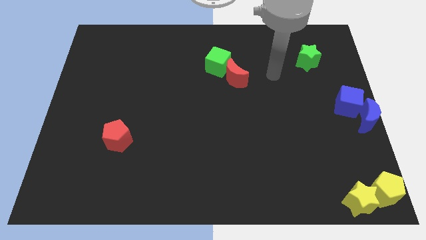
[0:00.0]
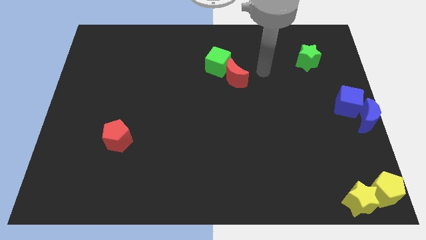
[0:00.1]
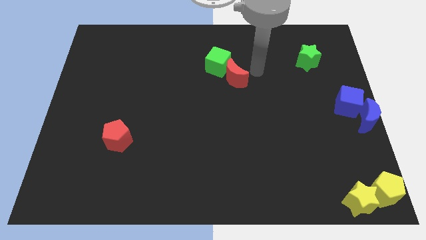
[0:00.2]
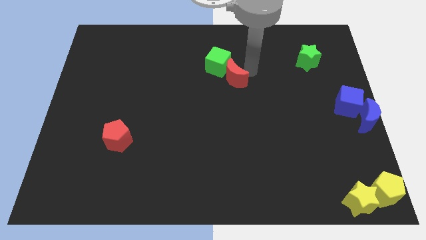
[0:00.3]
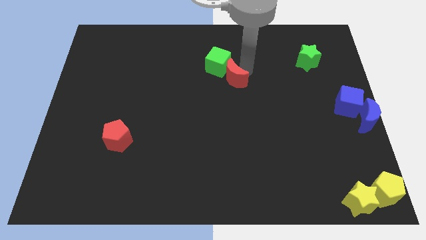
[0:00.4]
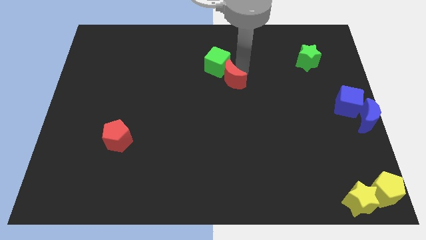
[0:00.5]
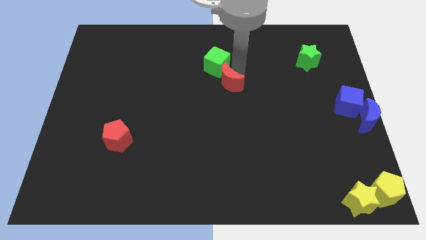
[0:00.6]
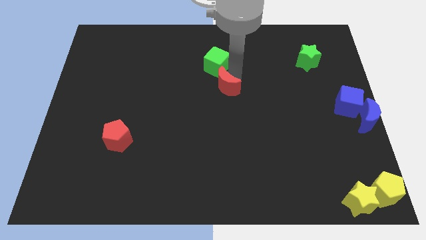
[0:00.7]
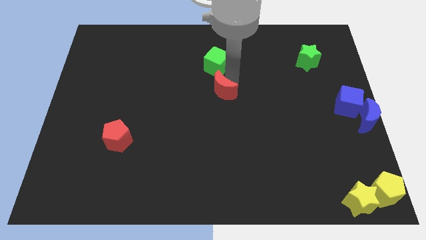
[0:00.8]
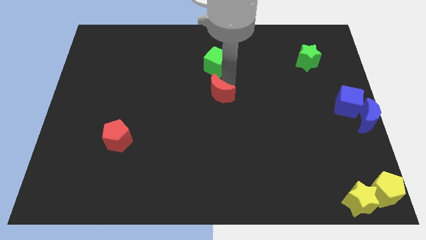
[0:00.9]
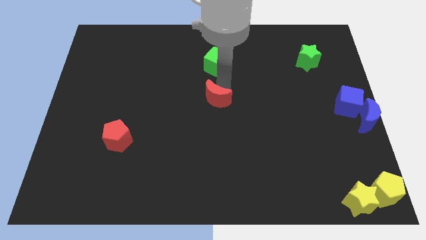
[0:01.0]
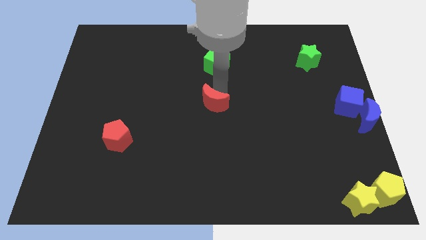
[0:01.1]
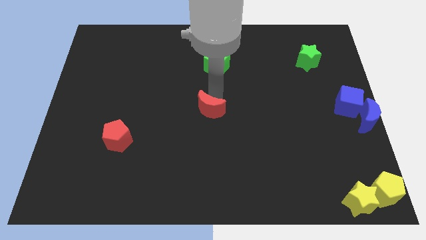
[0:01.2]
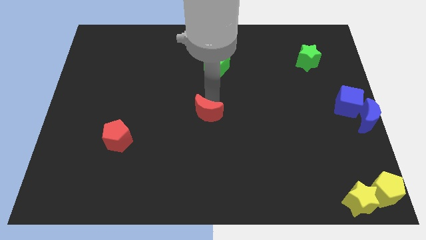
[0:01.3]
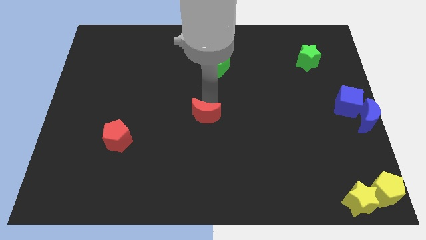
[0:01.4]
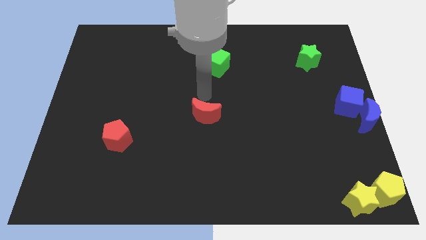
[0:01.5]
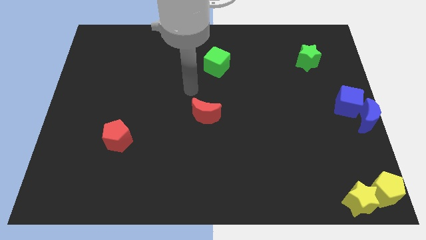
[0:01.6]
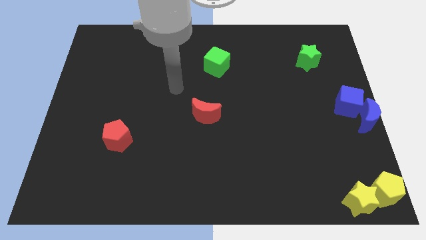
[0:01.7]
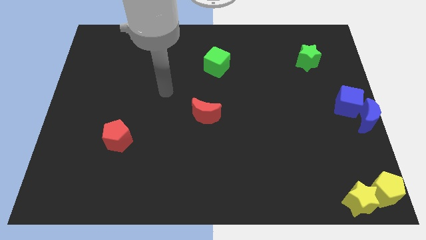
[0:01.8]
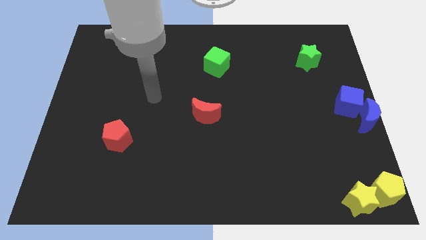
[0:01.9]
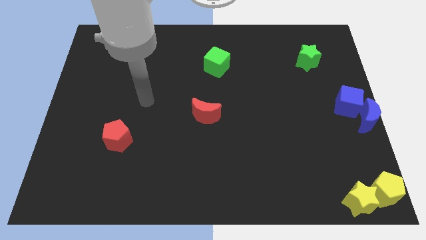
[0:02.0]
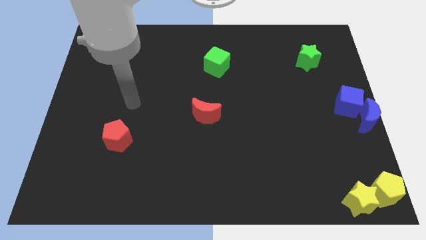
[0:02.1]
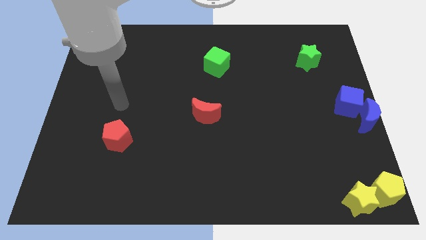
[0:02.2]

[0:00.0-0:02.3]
separate the red moon from green cube

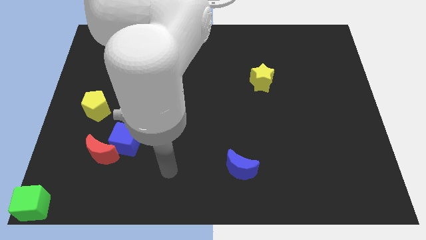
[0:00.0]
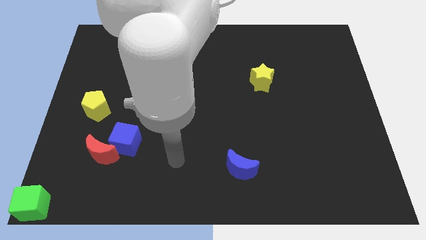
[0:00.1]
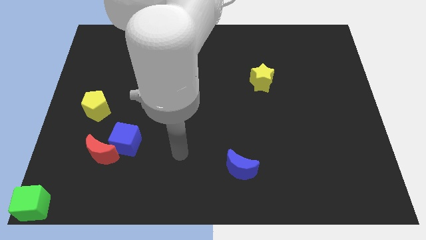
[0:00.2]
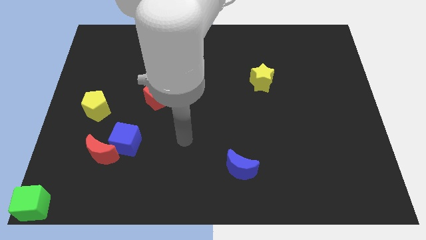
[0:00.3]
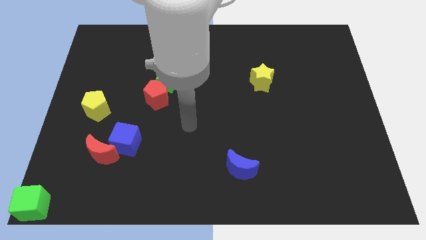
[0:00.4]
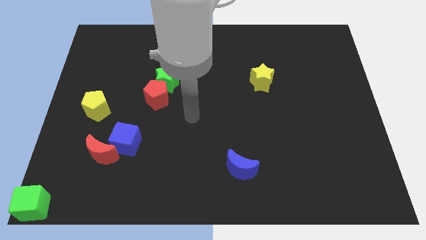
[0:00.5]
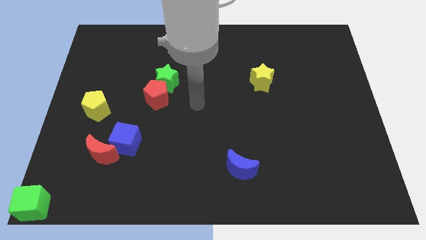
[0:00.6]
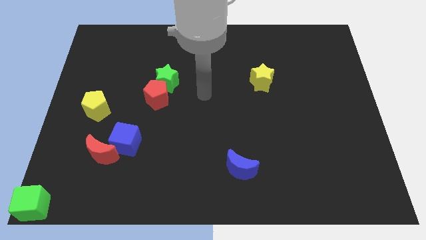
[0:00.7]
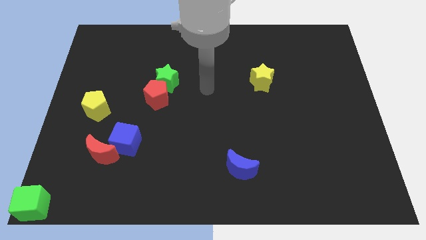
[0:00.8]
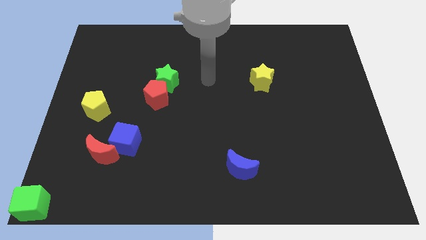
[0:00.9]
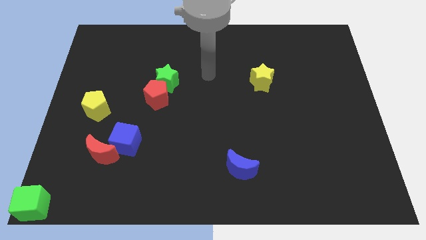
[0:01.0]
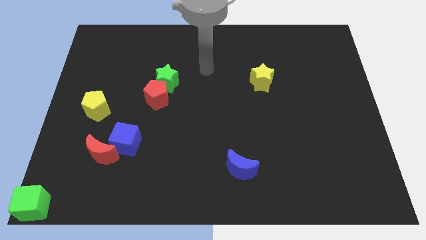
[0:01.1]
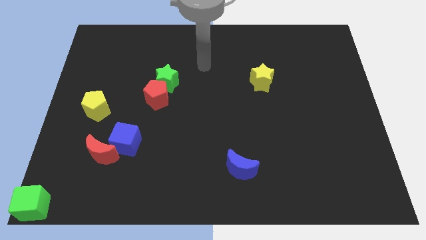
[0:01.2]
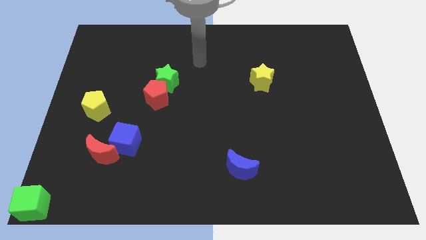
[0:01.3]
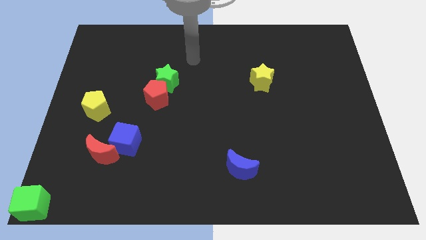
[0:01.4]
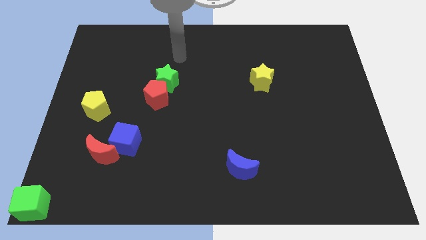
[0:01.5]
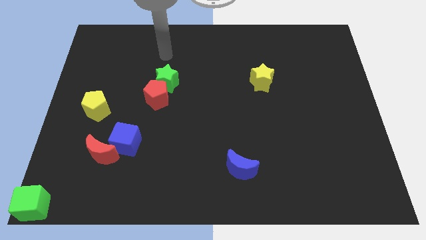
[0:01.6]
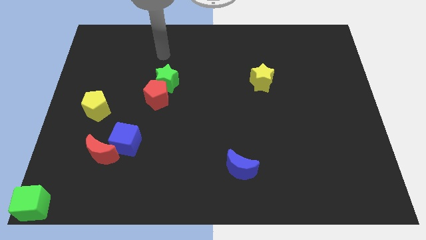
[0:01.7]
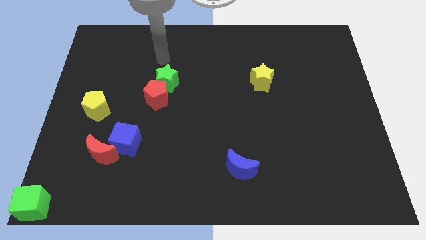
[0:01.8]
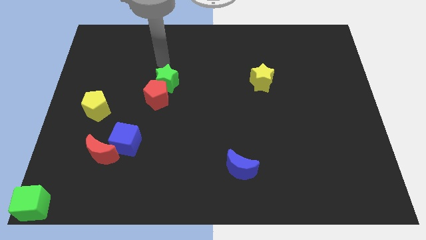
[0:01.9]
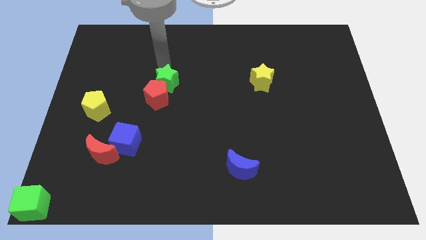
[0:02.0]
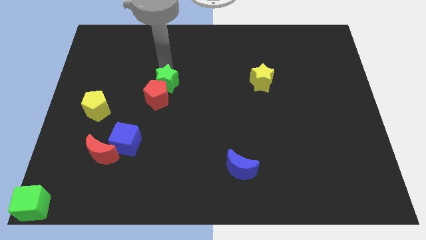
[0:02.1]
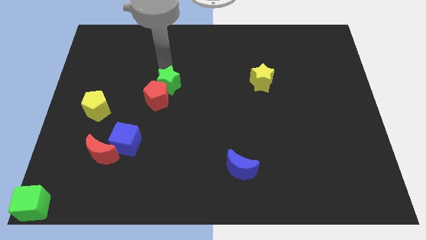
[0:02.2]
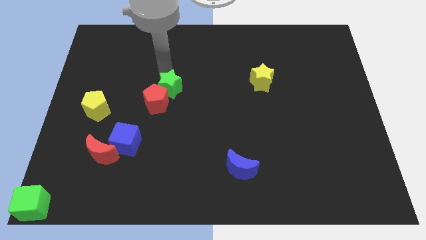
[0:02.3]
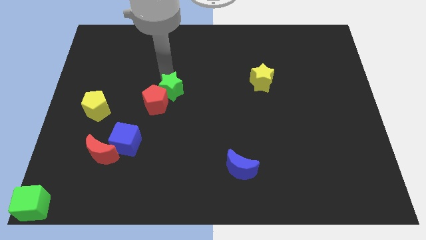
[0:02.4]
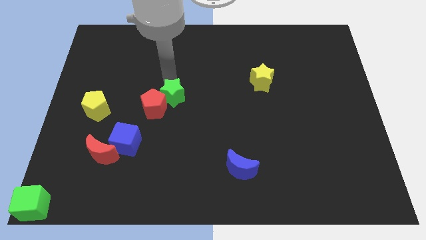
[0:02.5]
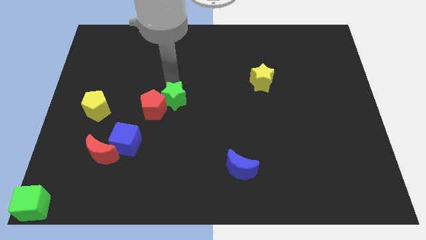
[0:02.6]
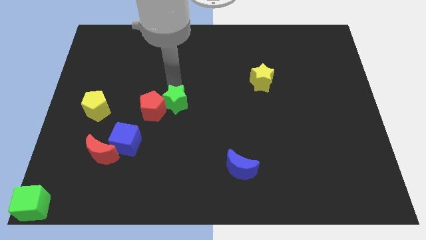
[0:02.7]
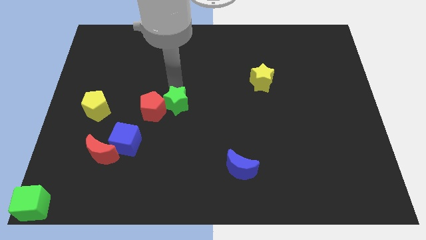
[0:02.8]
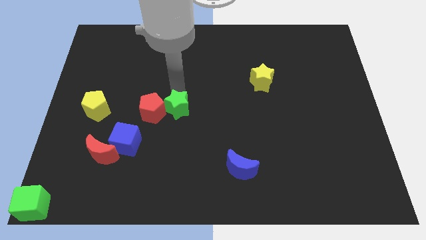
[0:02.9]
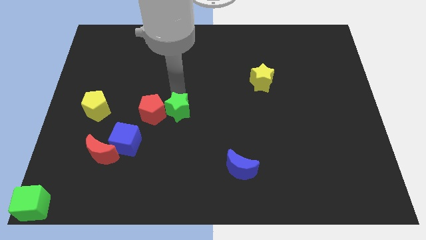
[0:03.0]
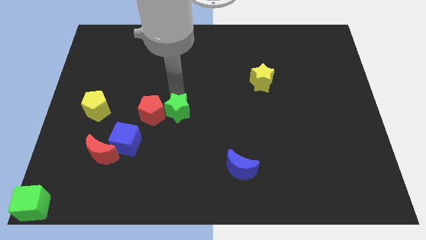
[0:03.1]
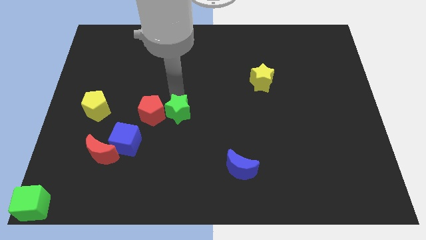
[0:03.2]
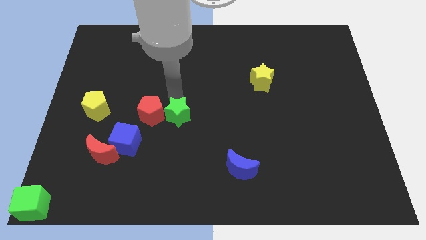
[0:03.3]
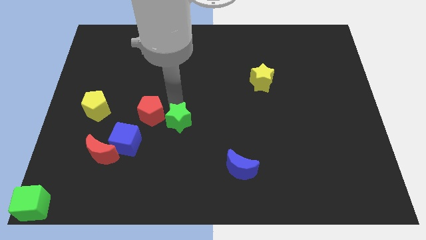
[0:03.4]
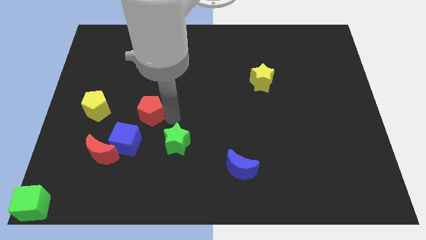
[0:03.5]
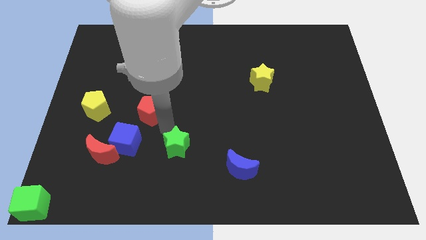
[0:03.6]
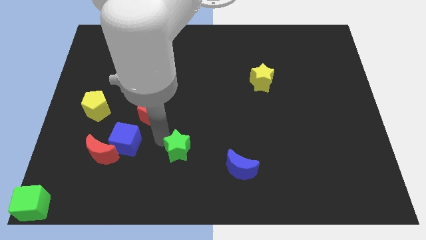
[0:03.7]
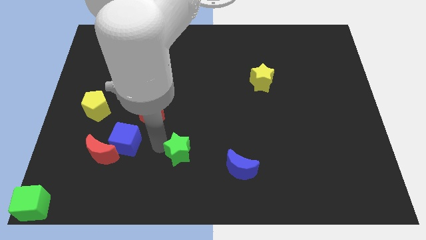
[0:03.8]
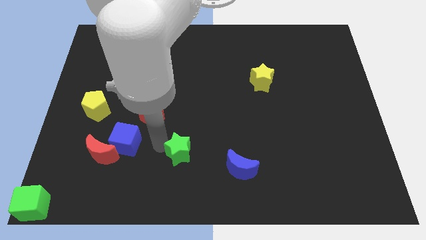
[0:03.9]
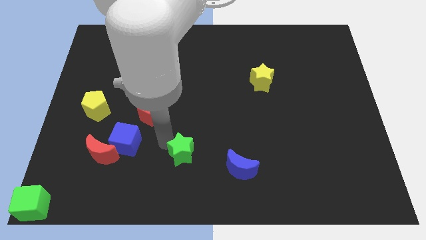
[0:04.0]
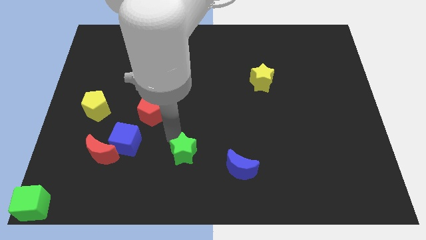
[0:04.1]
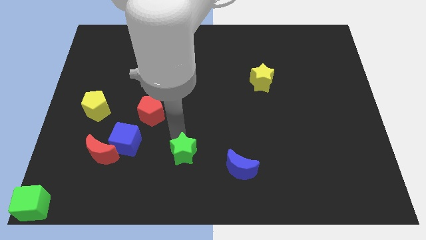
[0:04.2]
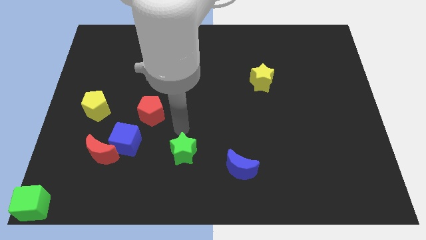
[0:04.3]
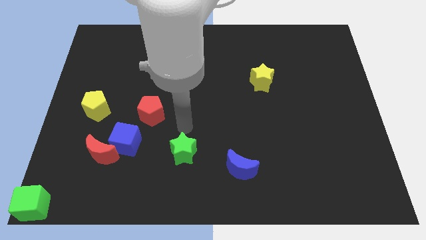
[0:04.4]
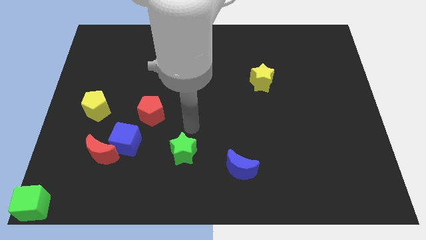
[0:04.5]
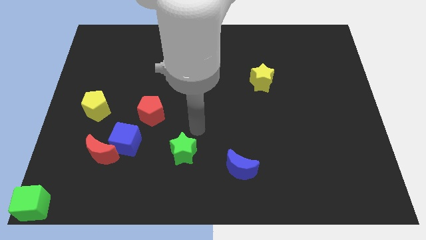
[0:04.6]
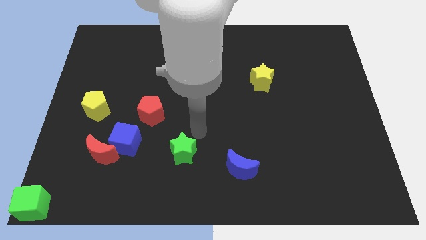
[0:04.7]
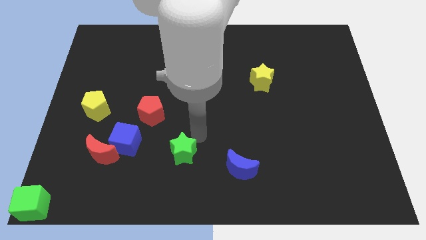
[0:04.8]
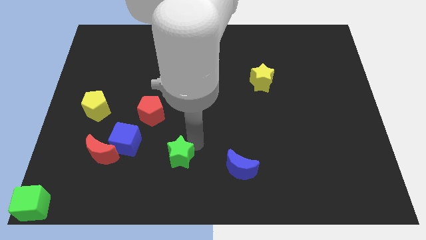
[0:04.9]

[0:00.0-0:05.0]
place the green star in between the blue blocks

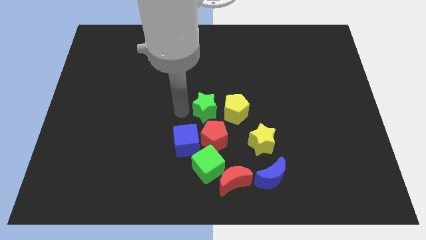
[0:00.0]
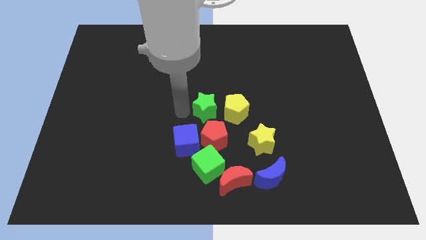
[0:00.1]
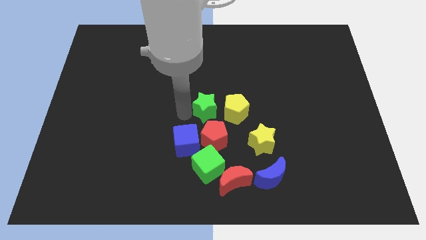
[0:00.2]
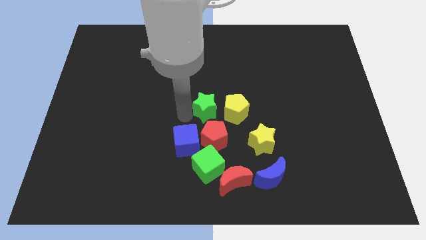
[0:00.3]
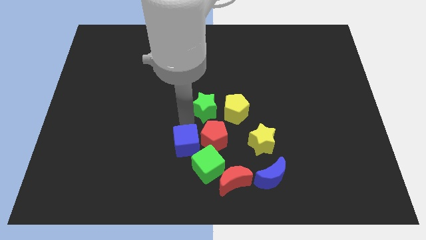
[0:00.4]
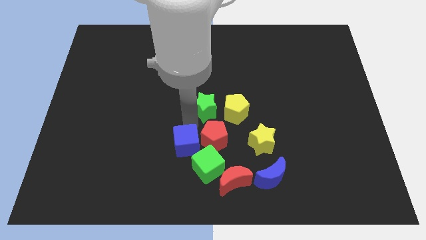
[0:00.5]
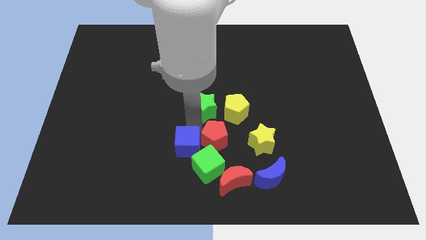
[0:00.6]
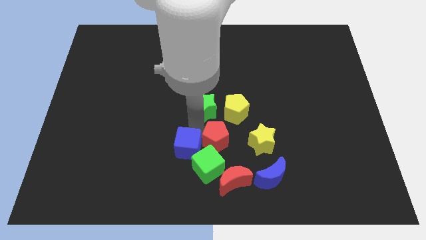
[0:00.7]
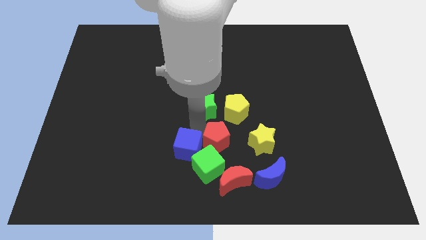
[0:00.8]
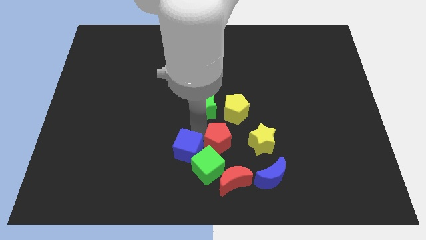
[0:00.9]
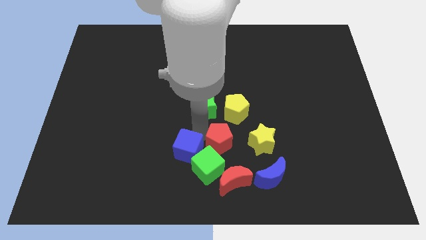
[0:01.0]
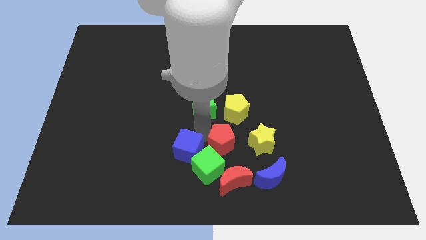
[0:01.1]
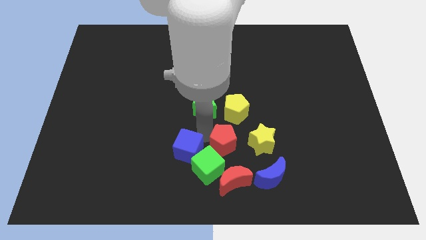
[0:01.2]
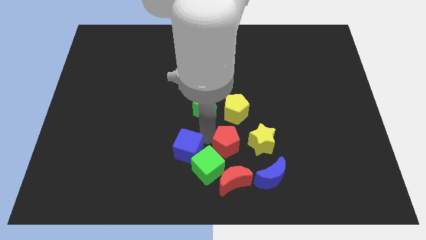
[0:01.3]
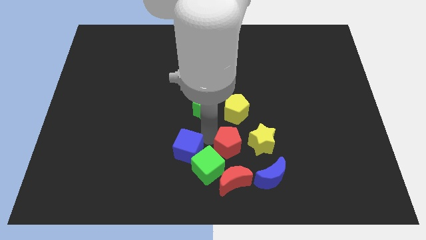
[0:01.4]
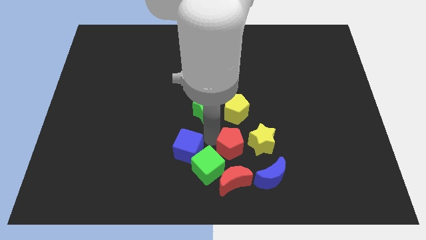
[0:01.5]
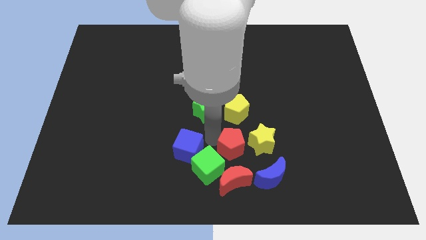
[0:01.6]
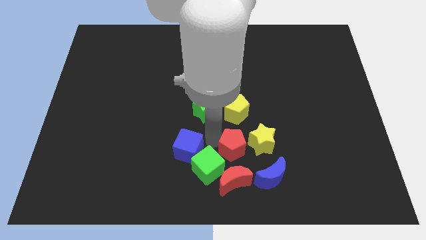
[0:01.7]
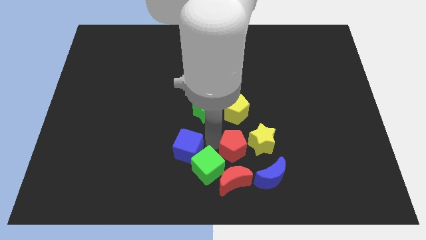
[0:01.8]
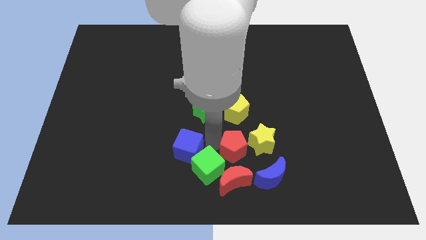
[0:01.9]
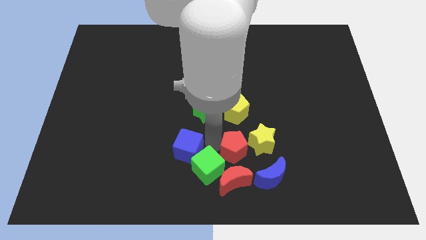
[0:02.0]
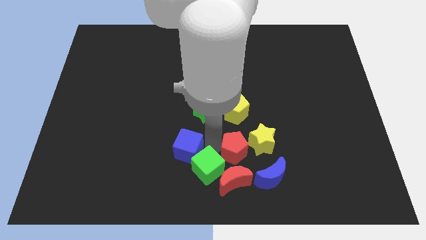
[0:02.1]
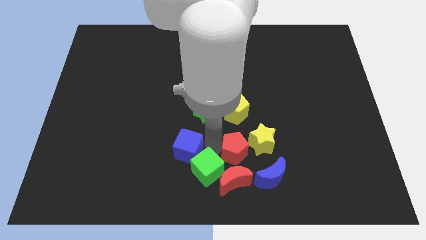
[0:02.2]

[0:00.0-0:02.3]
move the red pentagon left to the yellow star
